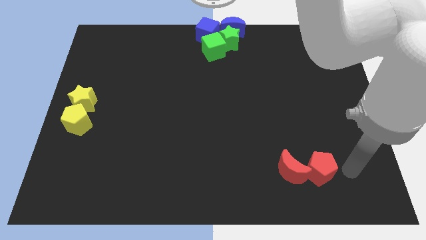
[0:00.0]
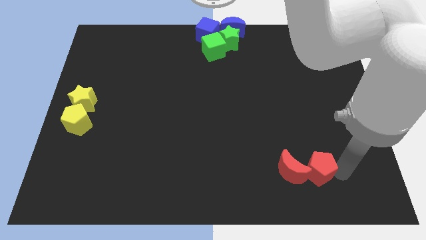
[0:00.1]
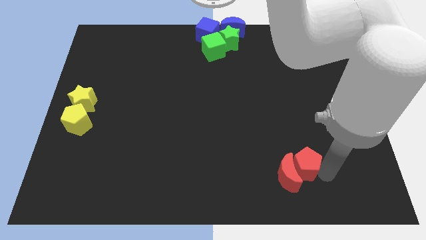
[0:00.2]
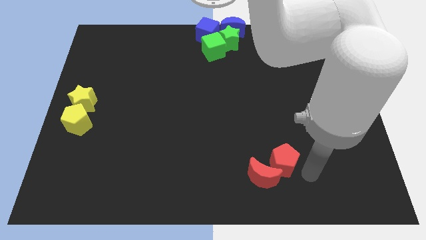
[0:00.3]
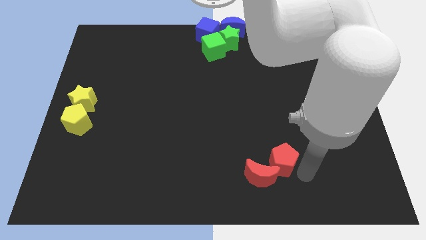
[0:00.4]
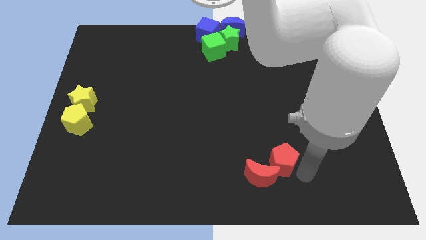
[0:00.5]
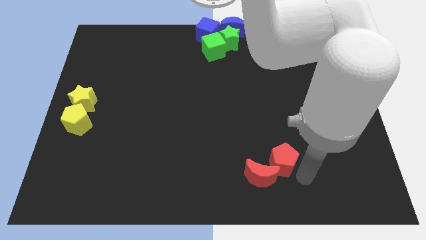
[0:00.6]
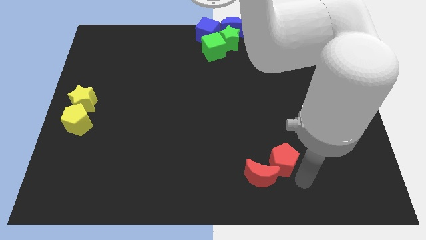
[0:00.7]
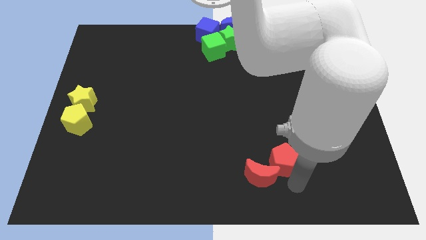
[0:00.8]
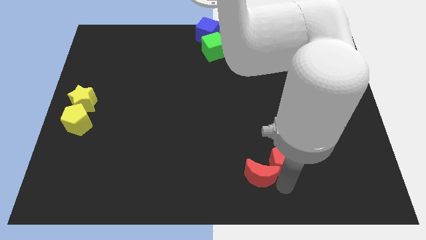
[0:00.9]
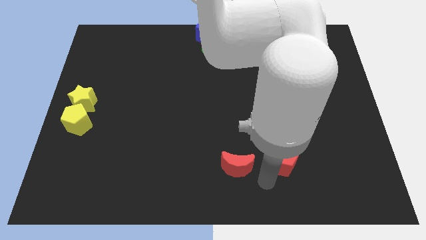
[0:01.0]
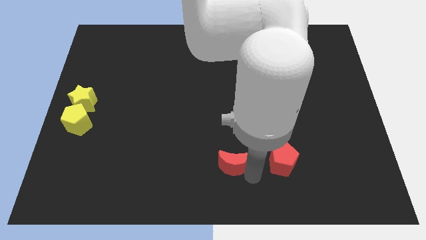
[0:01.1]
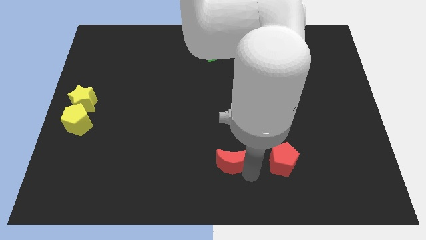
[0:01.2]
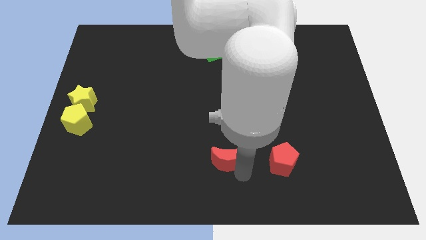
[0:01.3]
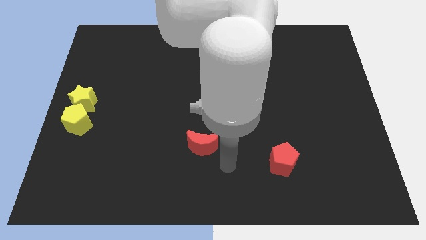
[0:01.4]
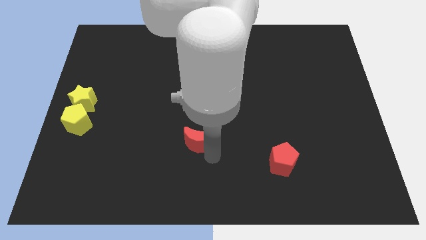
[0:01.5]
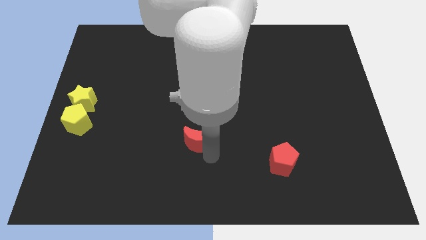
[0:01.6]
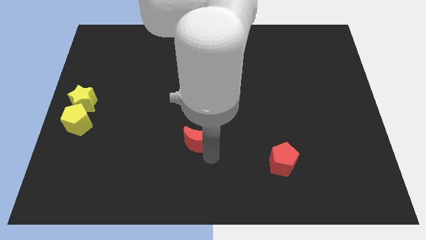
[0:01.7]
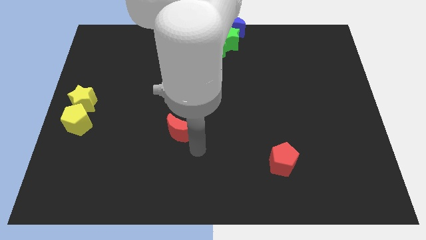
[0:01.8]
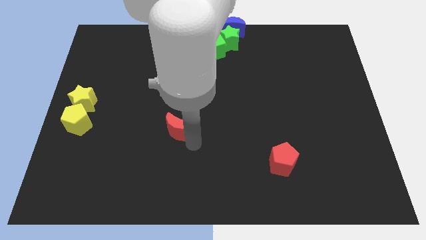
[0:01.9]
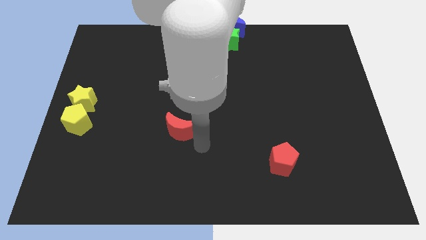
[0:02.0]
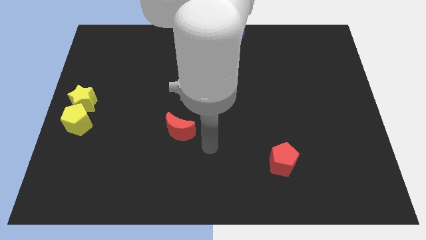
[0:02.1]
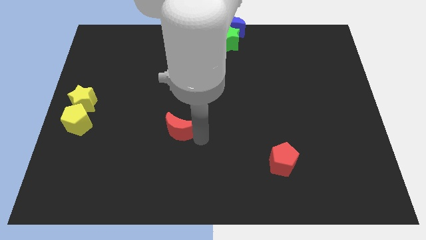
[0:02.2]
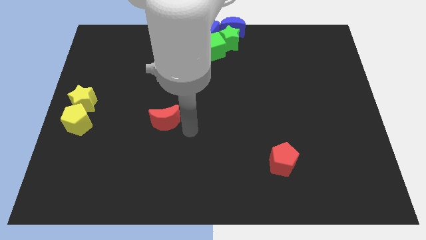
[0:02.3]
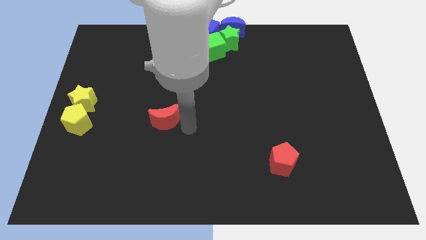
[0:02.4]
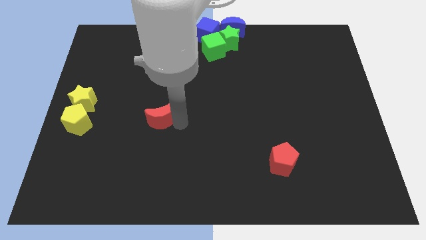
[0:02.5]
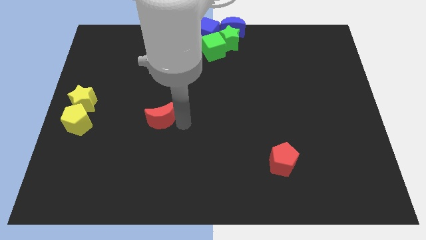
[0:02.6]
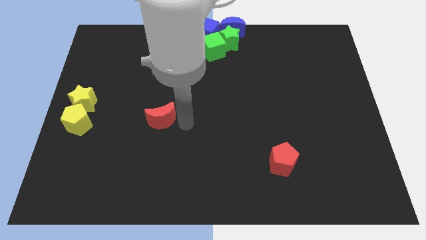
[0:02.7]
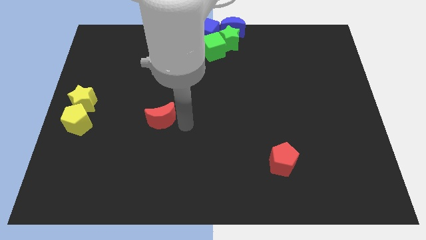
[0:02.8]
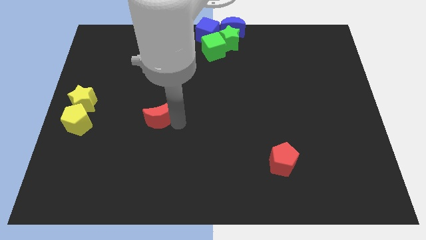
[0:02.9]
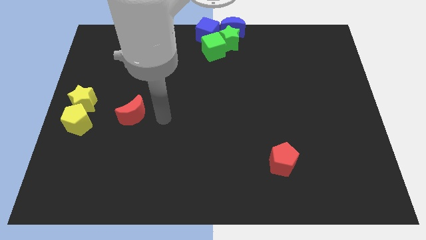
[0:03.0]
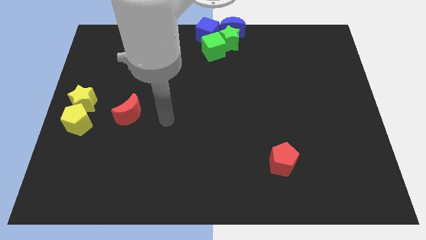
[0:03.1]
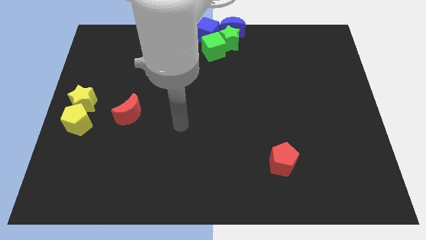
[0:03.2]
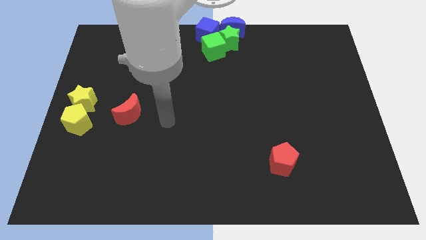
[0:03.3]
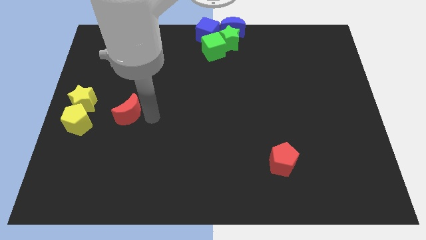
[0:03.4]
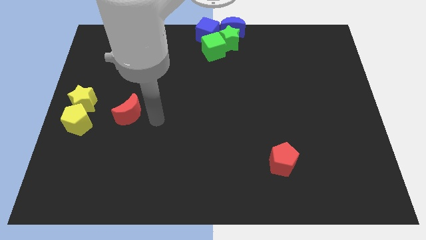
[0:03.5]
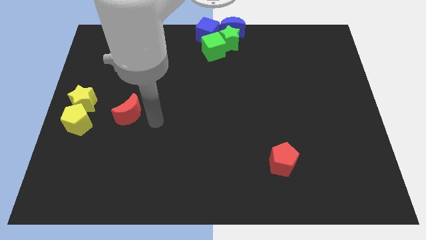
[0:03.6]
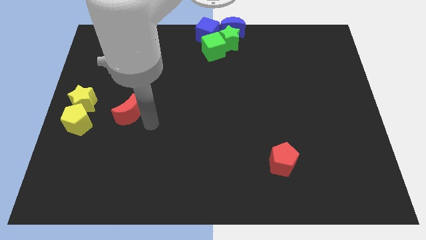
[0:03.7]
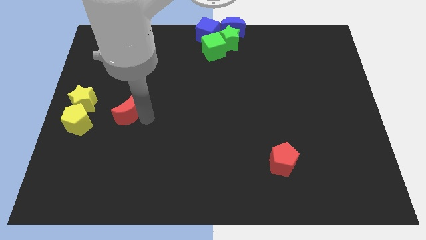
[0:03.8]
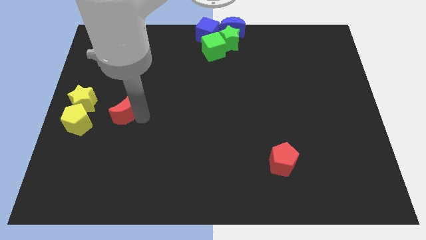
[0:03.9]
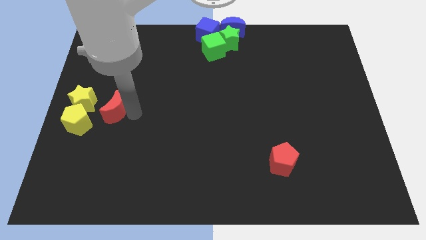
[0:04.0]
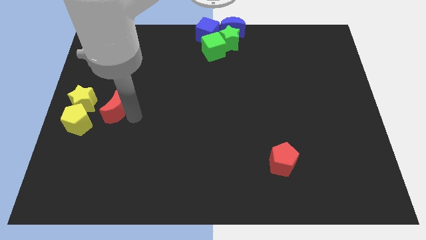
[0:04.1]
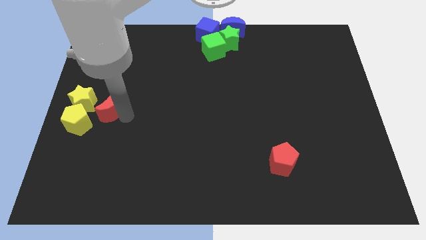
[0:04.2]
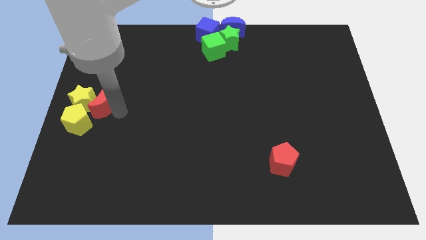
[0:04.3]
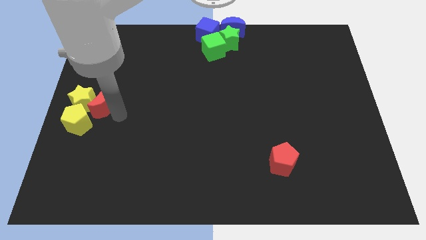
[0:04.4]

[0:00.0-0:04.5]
separate red moon from the red pentagon

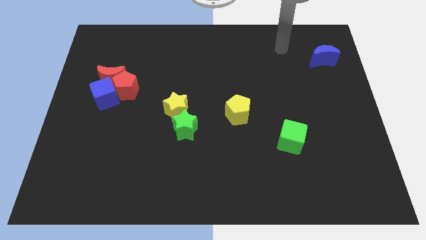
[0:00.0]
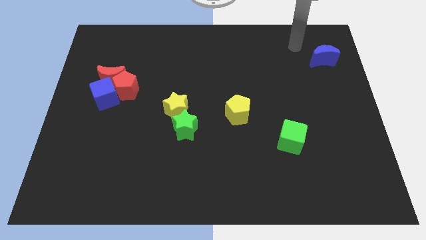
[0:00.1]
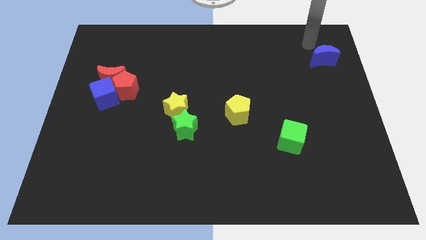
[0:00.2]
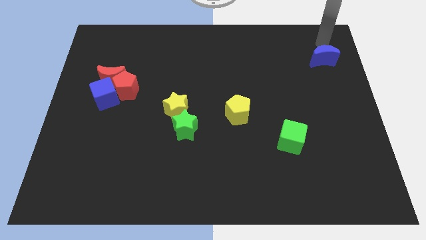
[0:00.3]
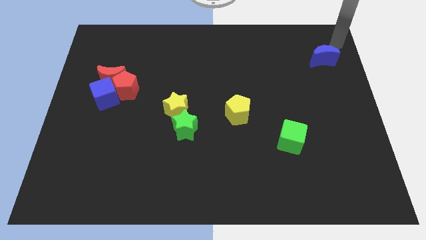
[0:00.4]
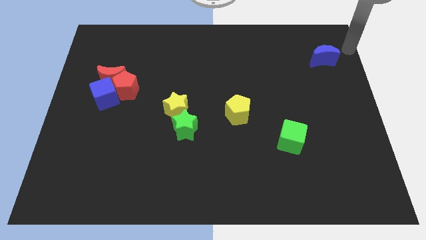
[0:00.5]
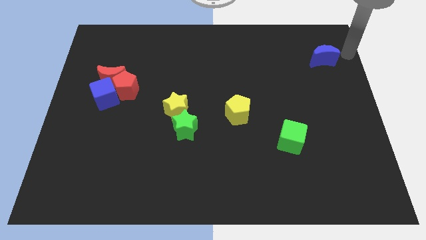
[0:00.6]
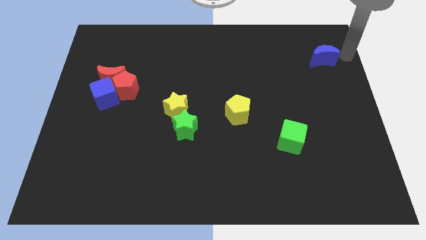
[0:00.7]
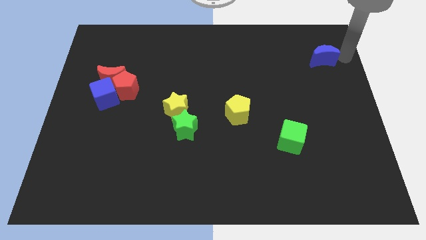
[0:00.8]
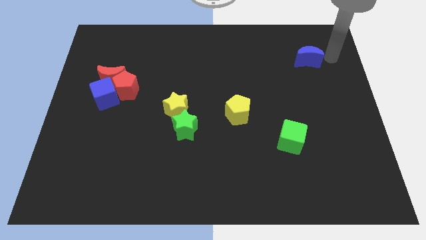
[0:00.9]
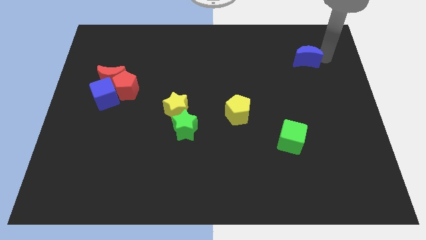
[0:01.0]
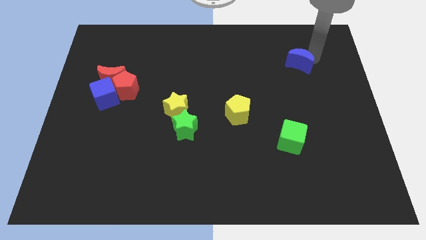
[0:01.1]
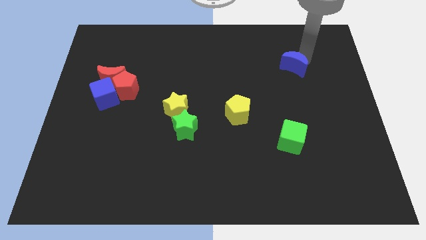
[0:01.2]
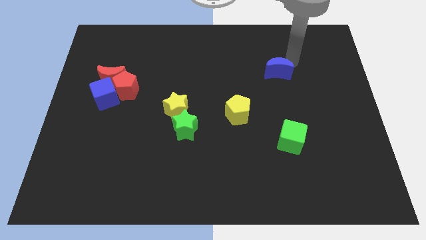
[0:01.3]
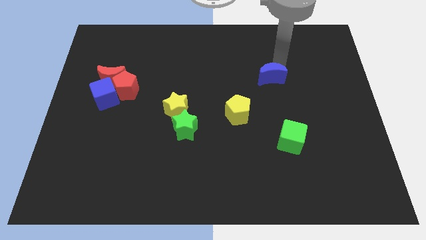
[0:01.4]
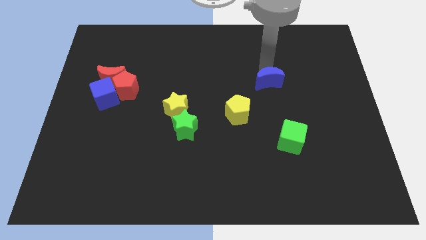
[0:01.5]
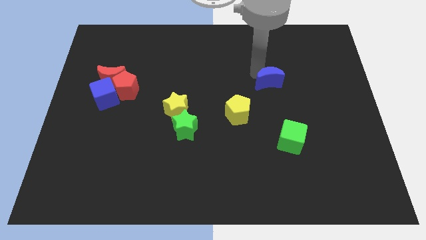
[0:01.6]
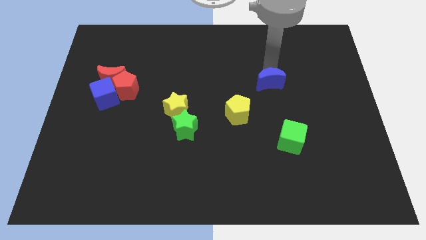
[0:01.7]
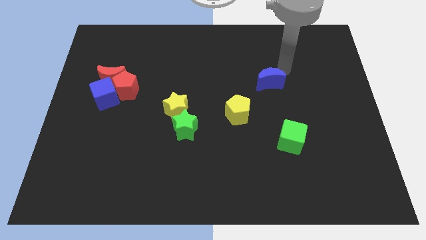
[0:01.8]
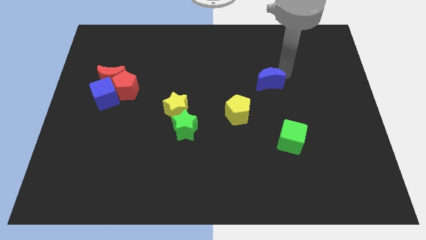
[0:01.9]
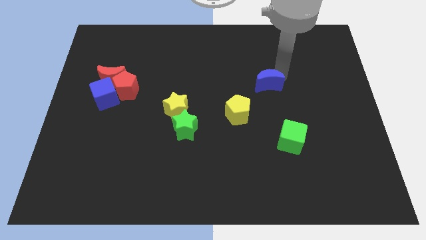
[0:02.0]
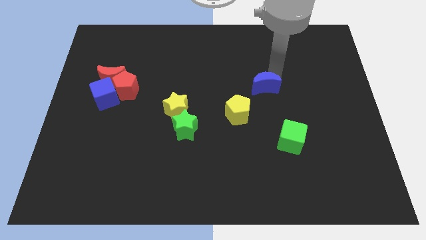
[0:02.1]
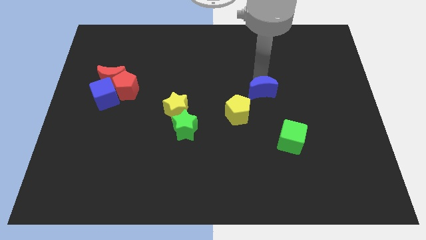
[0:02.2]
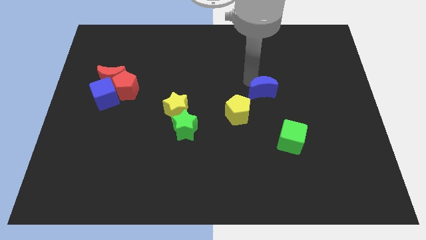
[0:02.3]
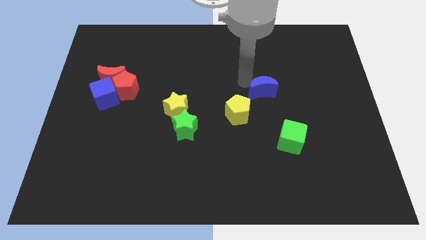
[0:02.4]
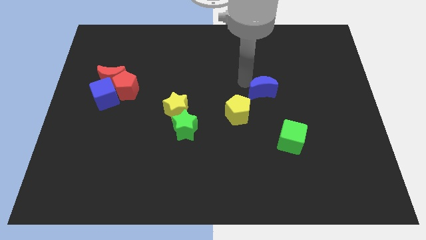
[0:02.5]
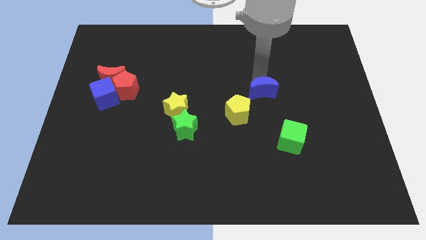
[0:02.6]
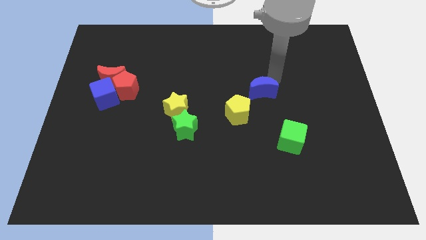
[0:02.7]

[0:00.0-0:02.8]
push blue crescent near to yellow pentagon

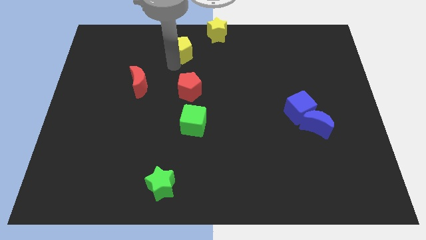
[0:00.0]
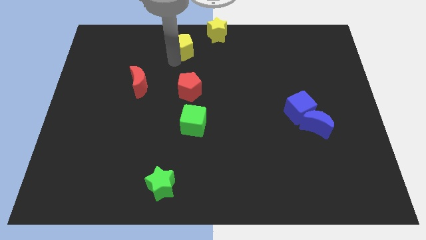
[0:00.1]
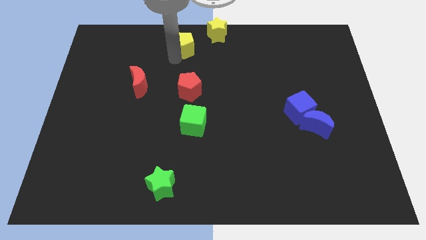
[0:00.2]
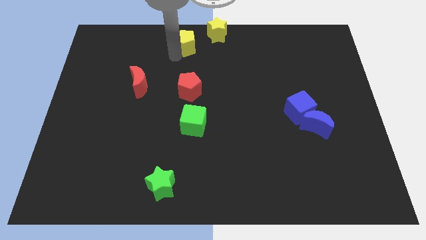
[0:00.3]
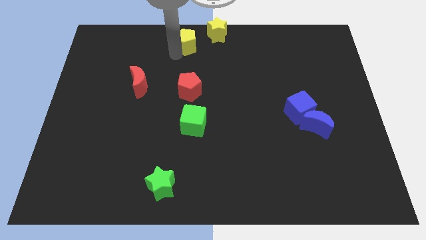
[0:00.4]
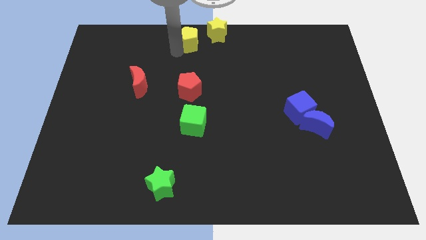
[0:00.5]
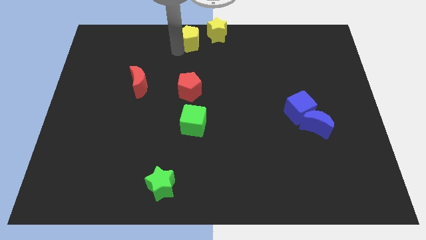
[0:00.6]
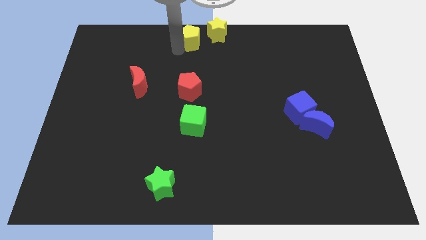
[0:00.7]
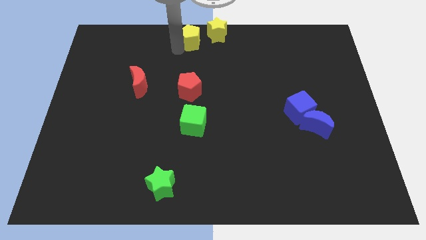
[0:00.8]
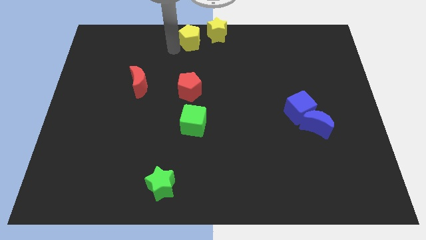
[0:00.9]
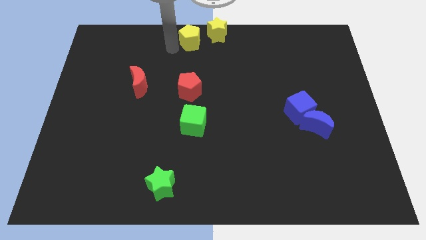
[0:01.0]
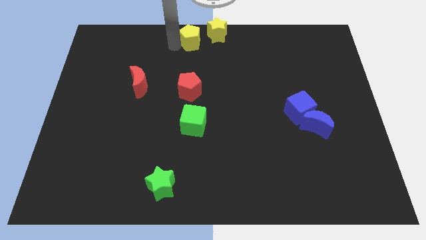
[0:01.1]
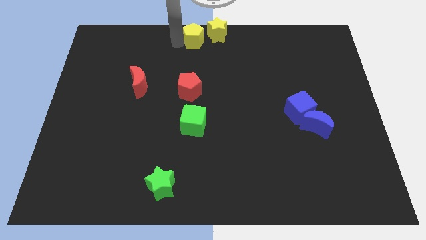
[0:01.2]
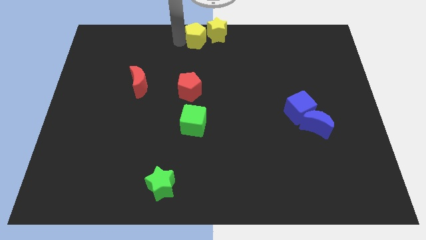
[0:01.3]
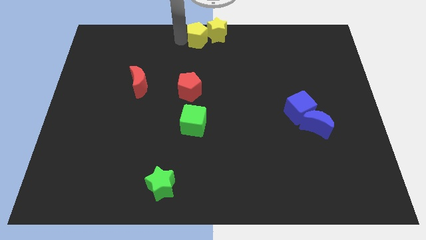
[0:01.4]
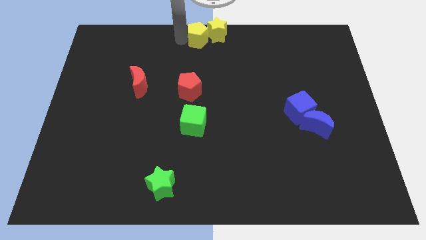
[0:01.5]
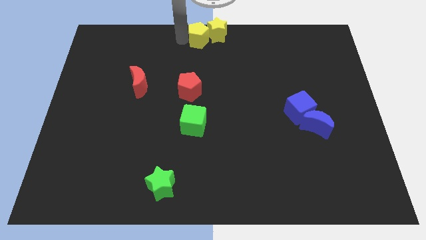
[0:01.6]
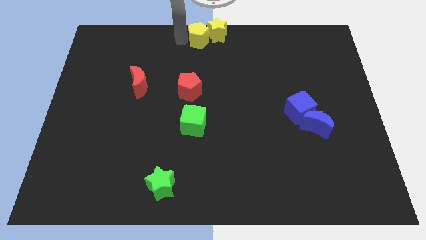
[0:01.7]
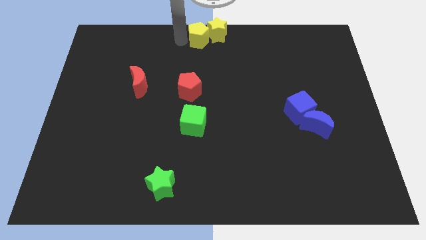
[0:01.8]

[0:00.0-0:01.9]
separate the yellow pentagon towards left of yellow star
